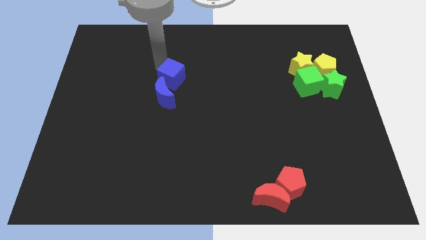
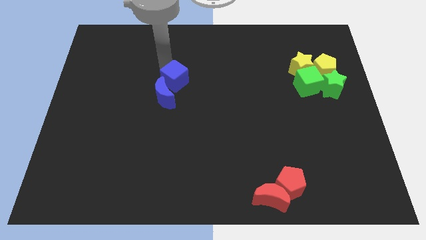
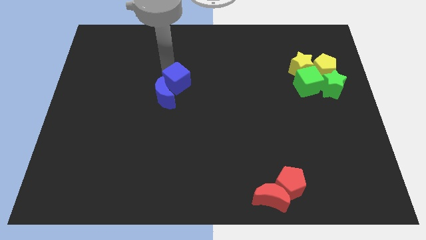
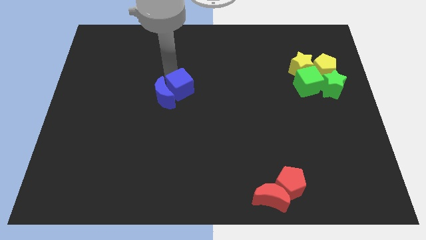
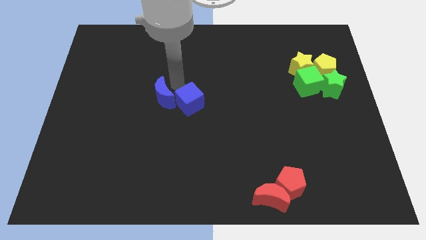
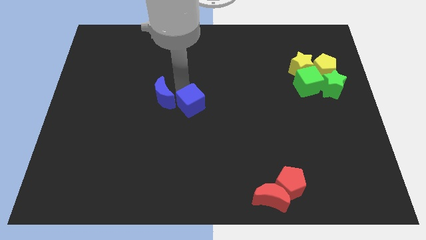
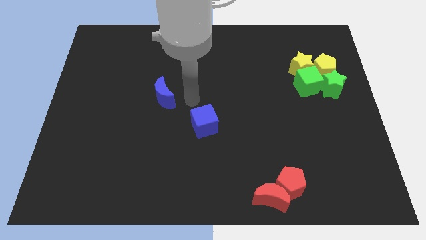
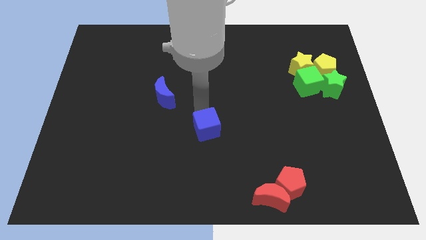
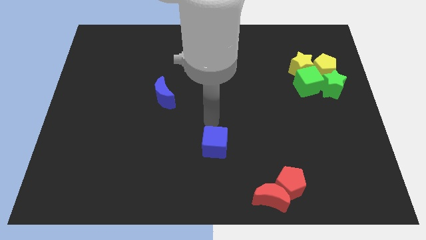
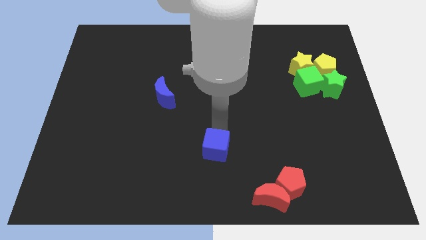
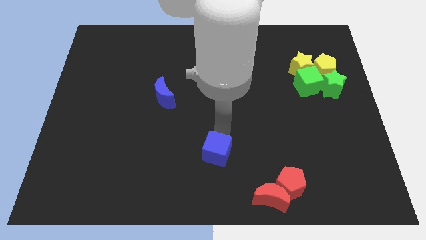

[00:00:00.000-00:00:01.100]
separate blue cube from blue moon

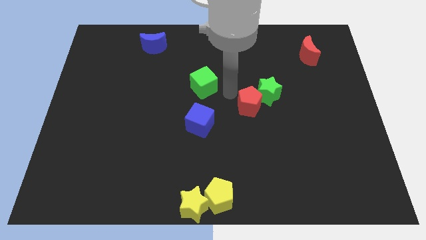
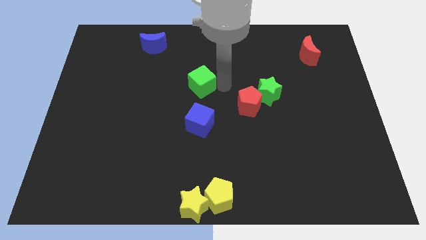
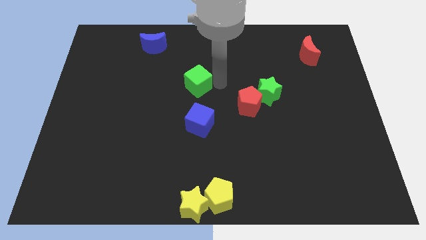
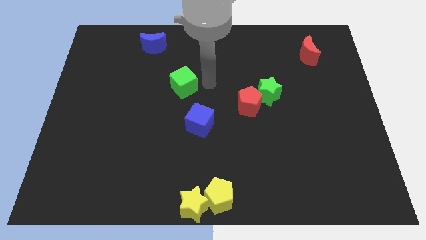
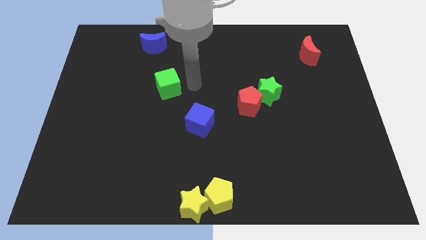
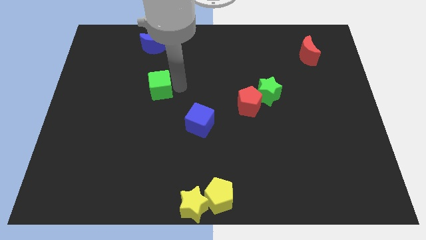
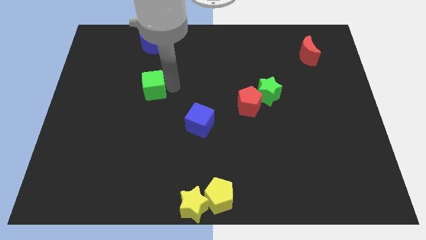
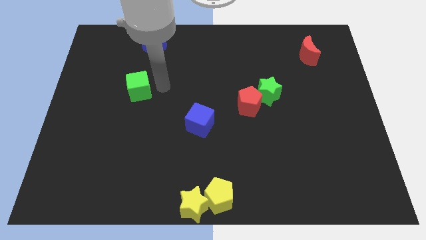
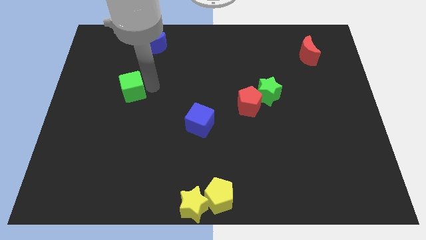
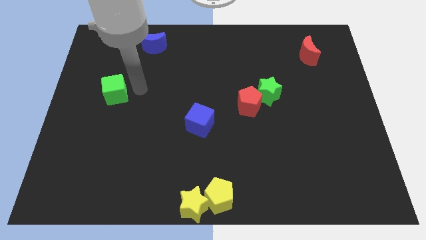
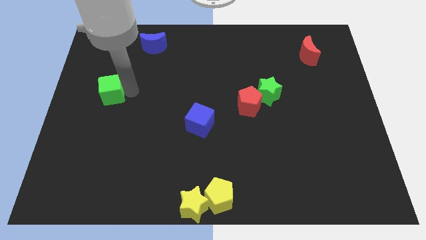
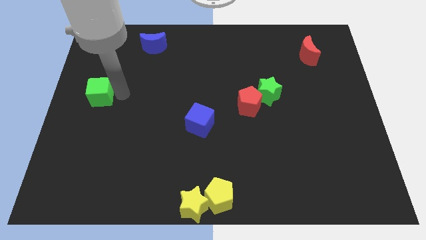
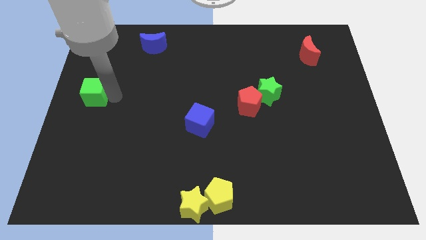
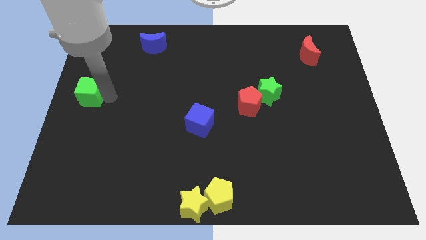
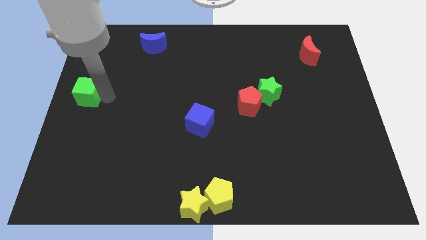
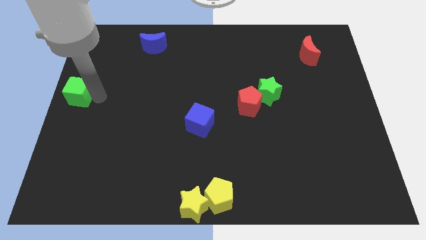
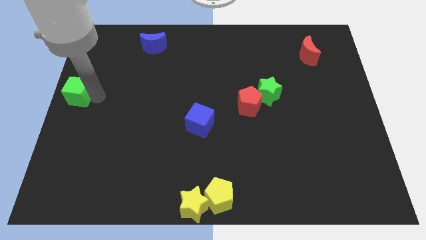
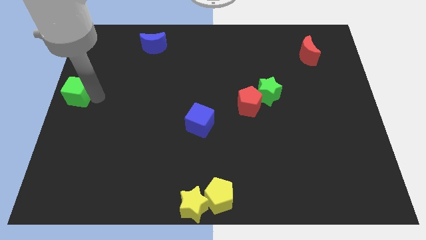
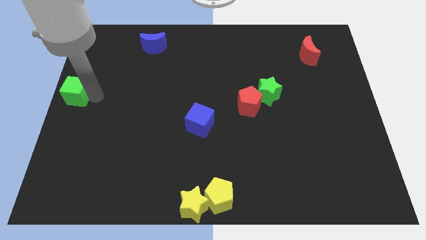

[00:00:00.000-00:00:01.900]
move the green cube towards the center left of the board

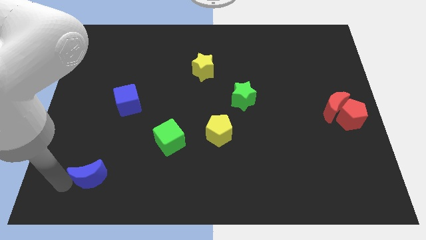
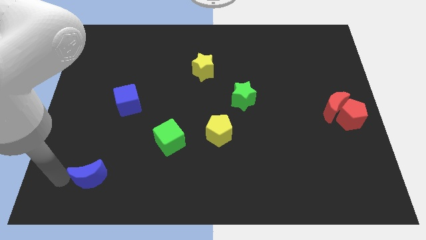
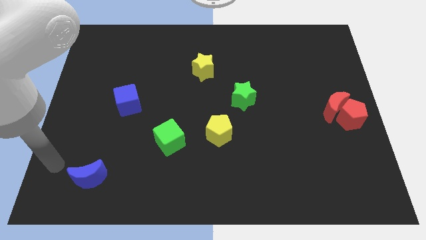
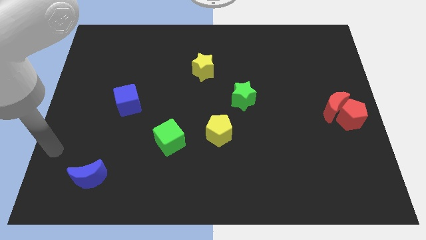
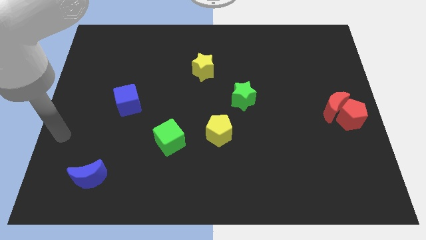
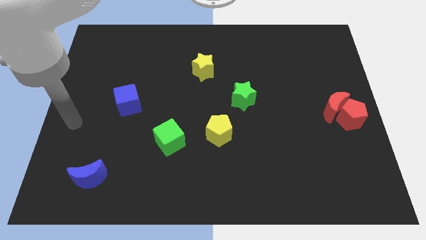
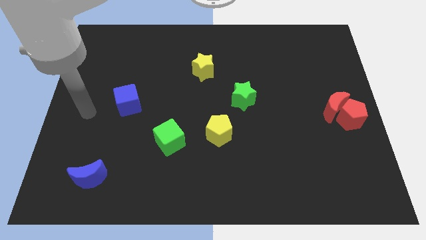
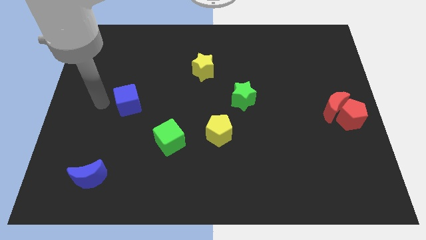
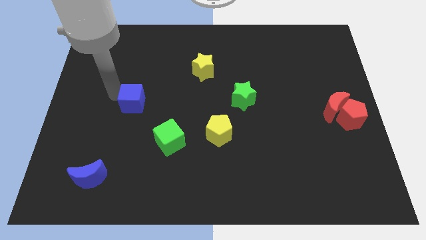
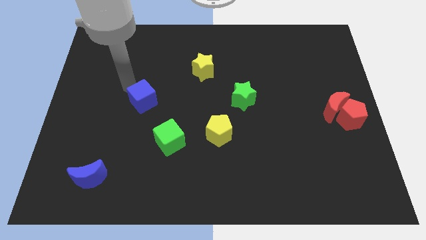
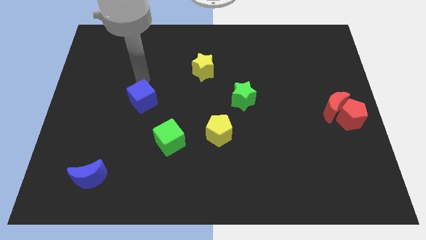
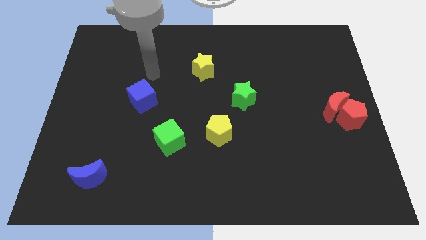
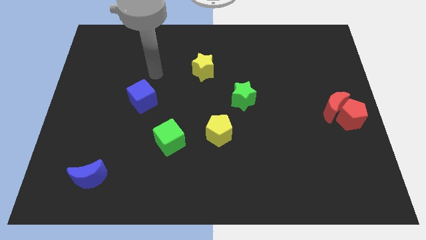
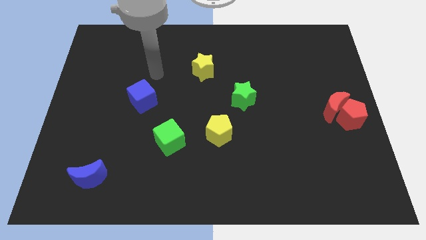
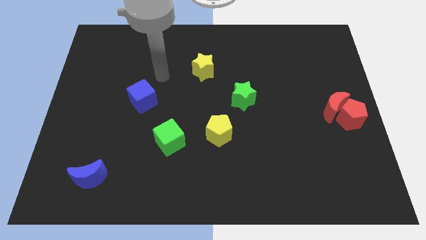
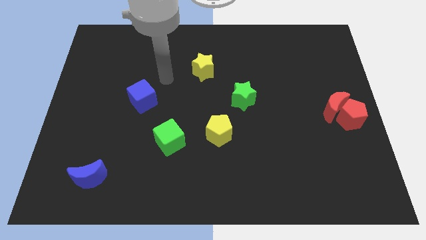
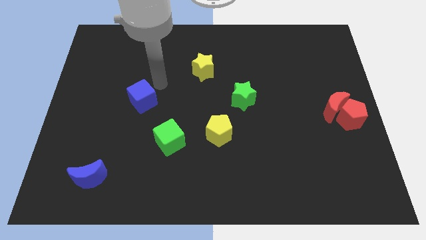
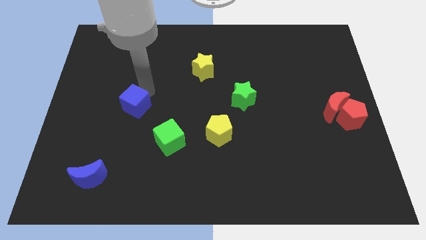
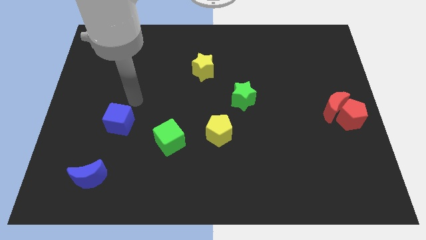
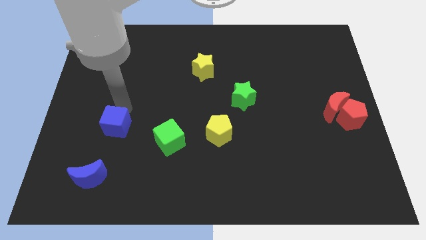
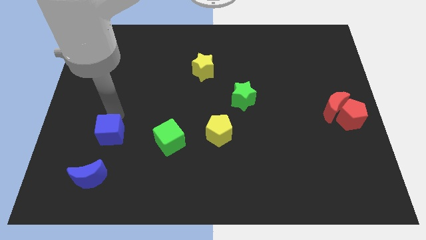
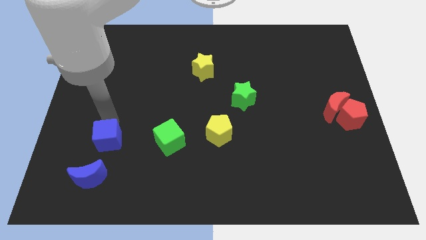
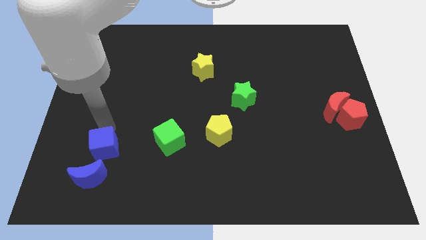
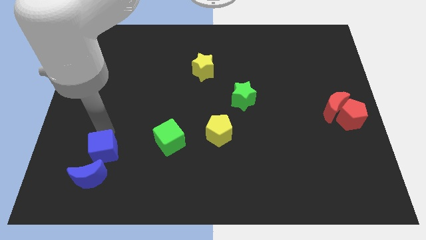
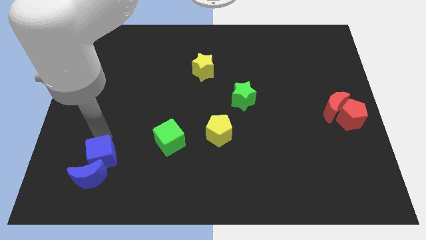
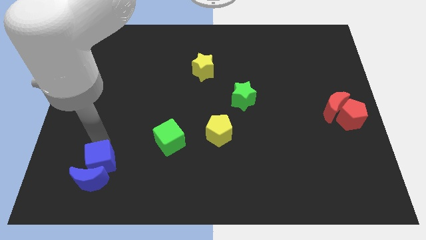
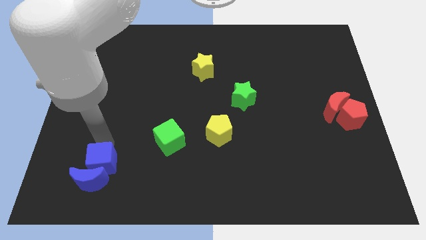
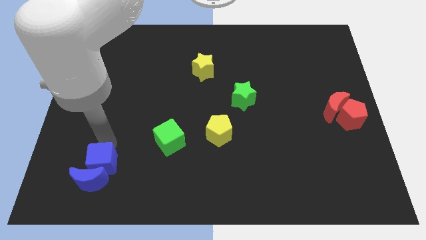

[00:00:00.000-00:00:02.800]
move the blue cube to the top of the blue crescent

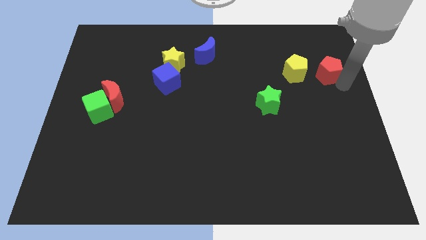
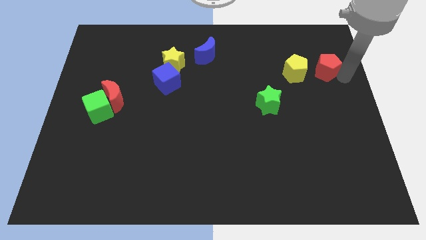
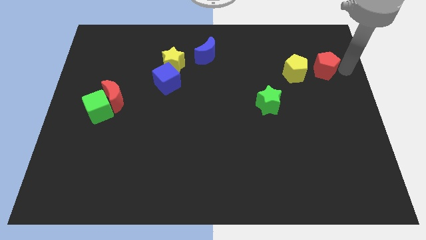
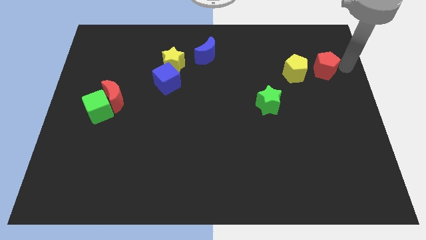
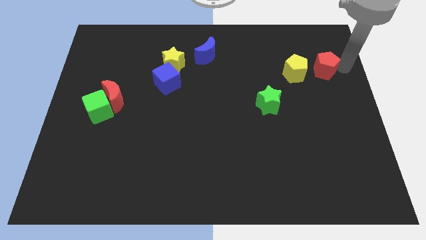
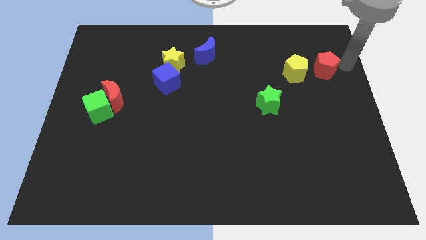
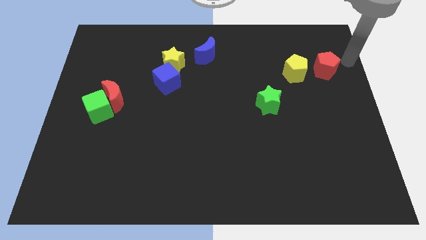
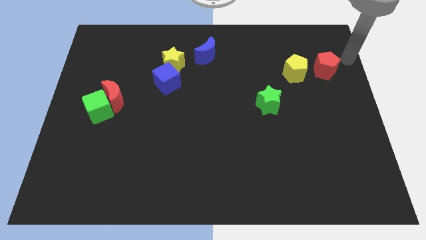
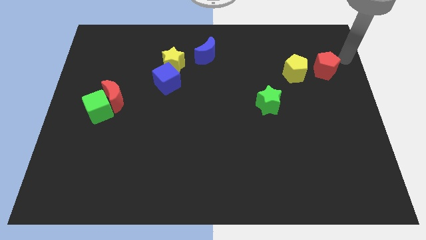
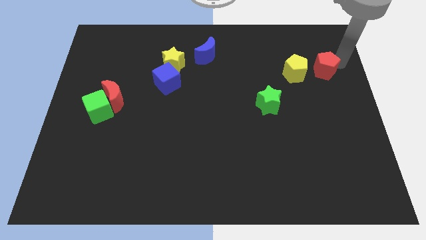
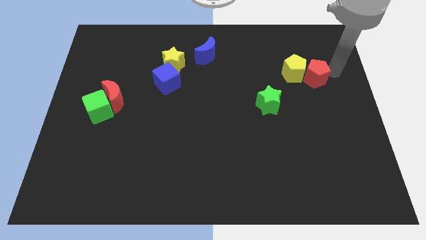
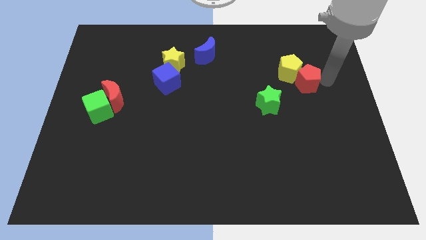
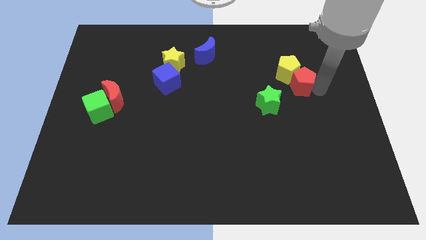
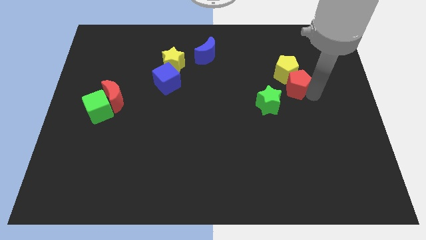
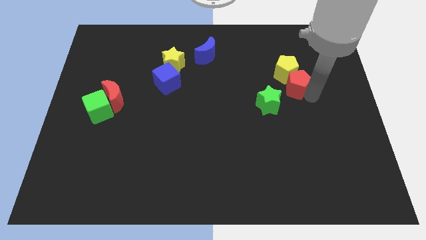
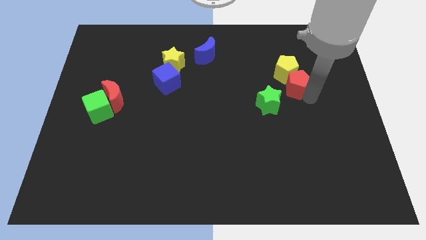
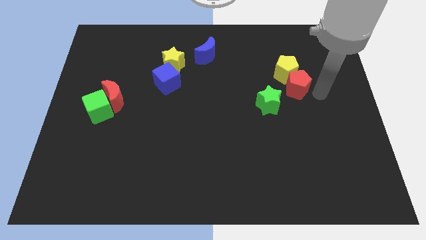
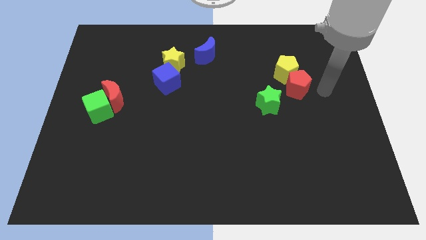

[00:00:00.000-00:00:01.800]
place red pentagon to the bottom of yellow pentagon

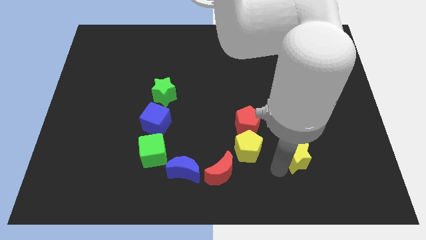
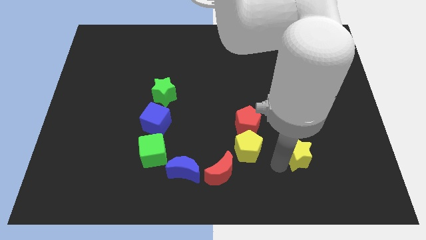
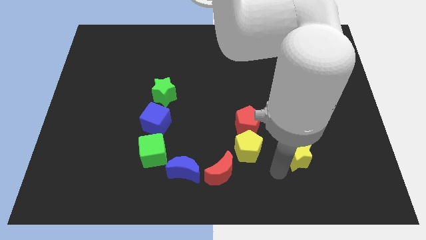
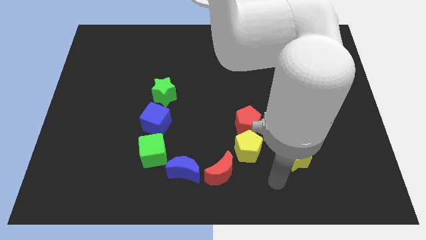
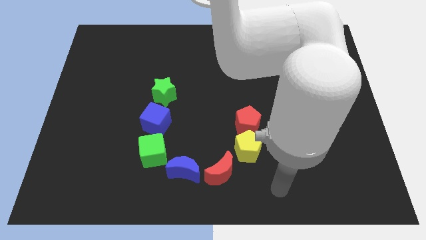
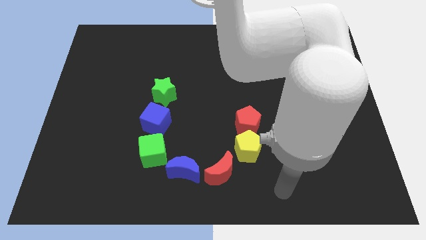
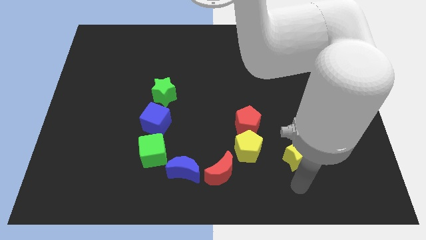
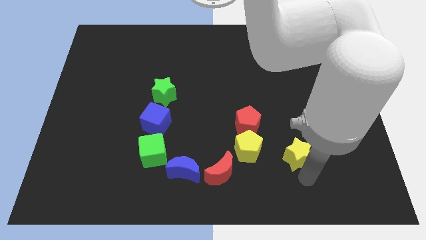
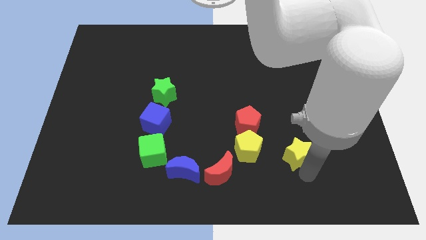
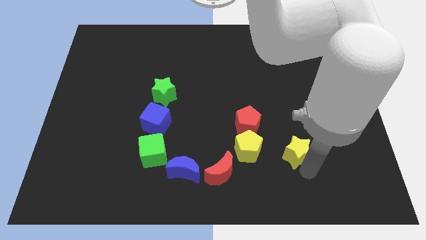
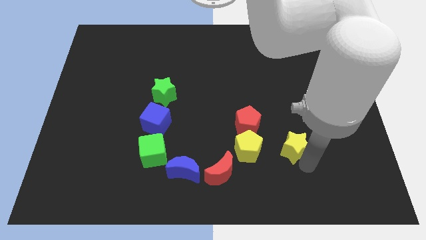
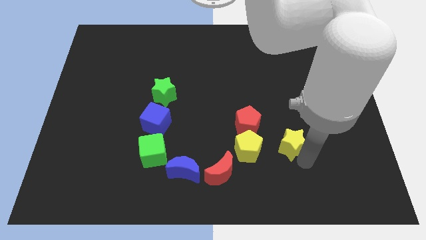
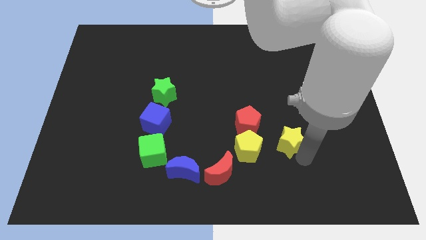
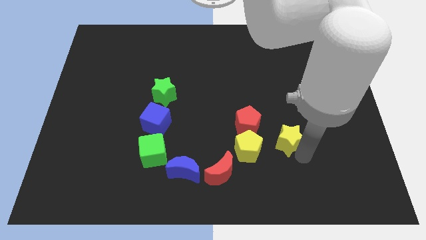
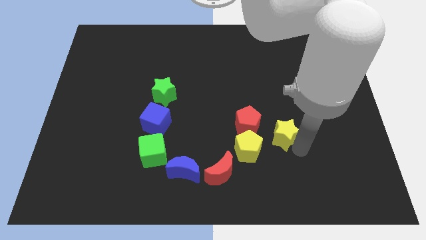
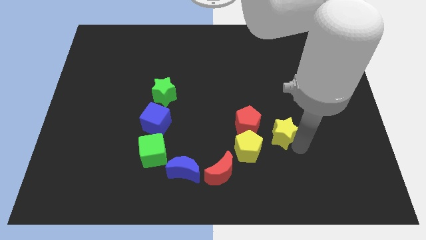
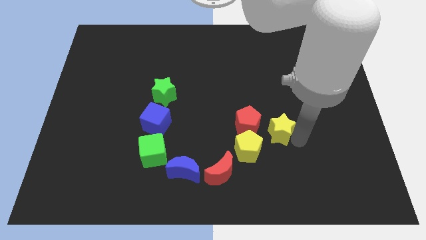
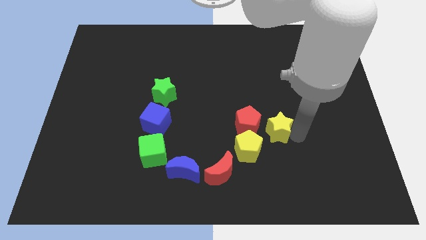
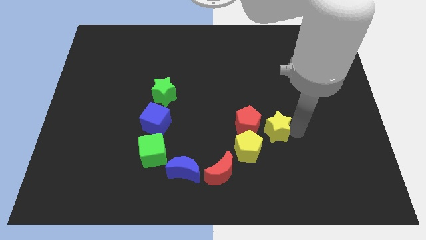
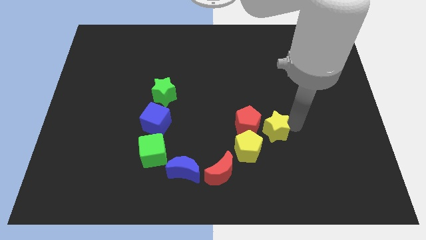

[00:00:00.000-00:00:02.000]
push the yellow start near to the red pentagon
